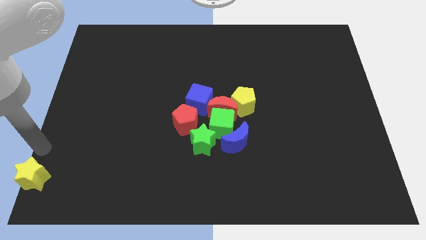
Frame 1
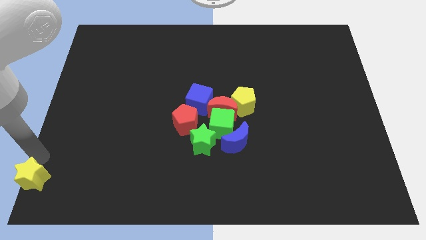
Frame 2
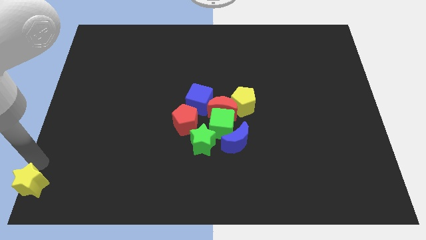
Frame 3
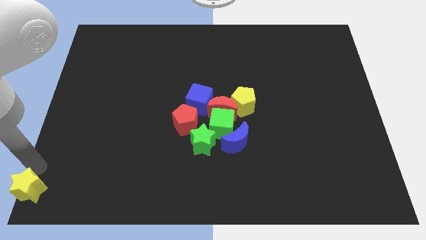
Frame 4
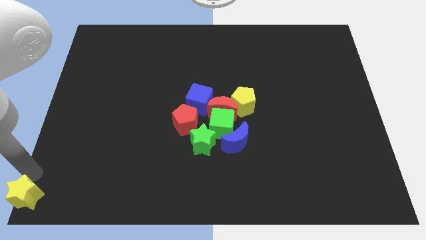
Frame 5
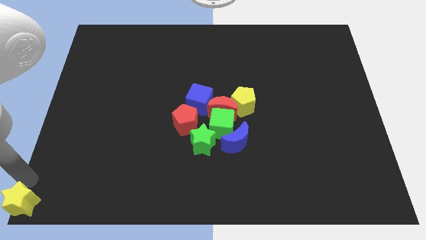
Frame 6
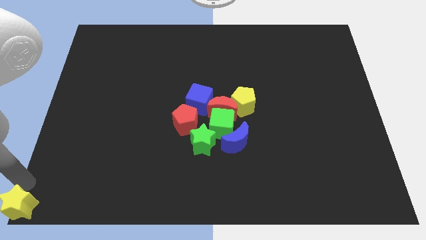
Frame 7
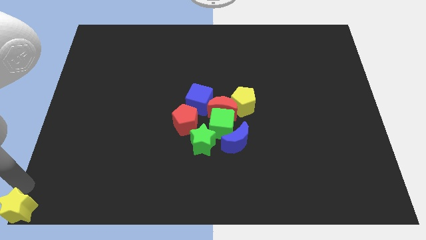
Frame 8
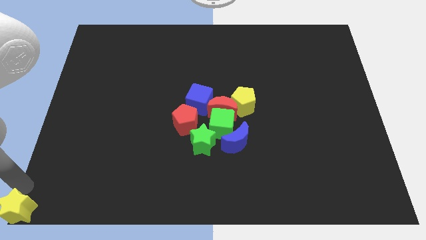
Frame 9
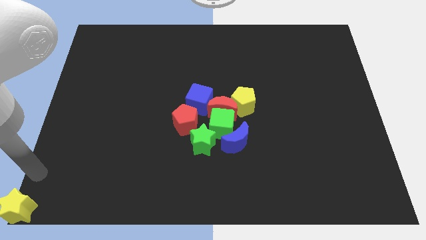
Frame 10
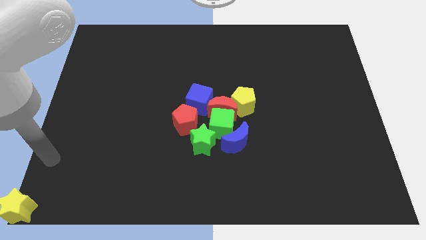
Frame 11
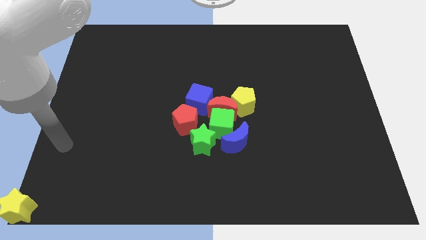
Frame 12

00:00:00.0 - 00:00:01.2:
place a yellow star towards down left corner

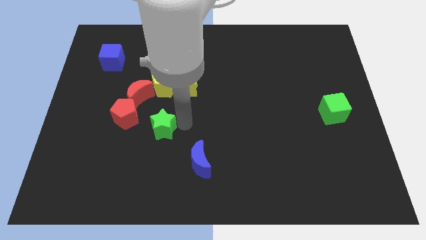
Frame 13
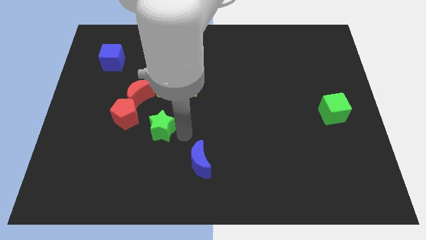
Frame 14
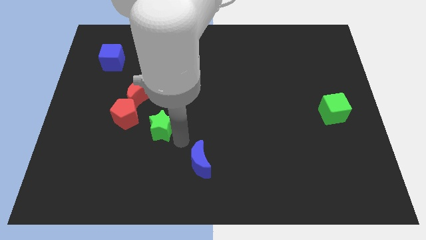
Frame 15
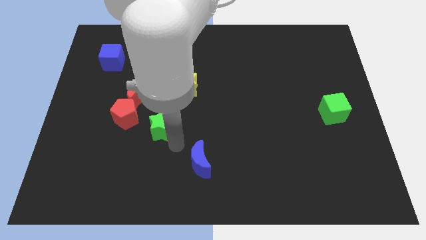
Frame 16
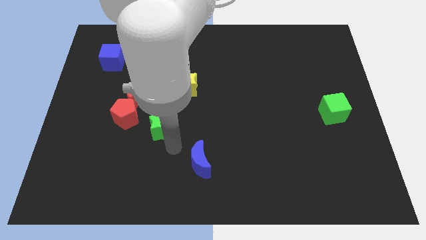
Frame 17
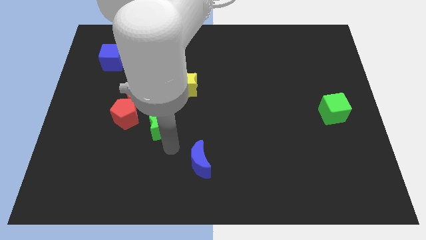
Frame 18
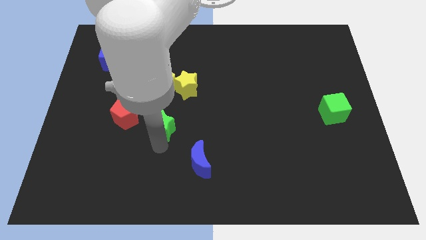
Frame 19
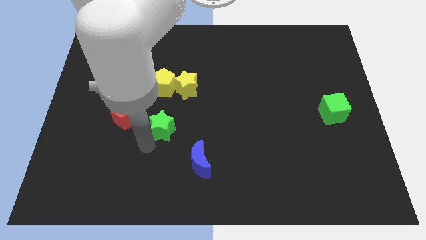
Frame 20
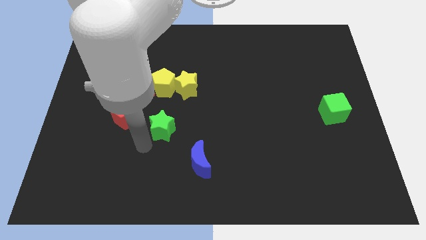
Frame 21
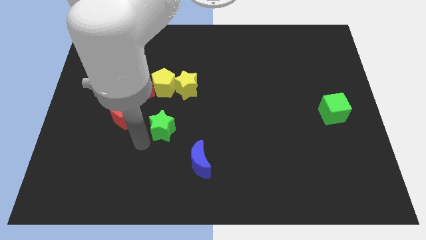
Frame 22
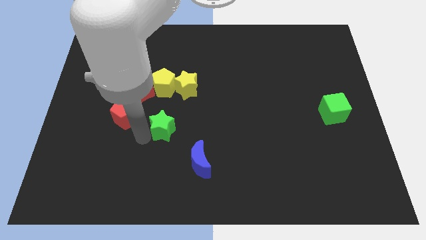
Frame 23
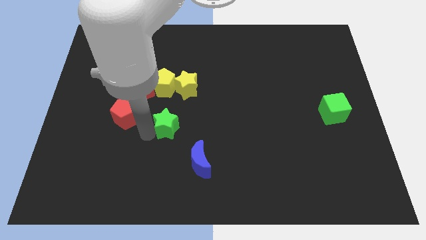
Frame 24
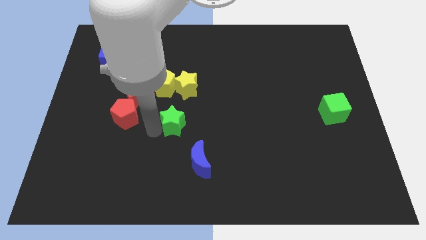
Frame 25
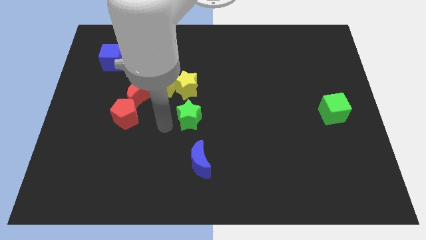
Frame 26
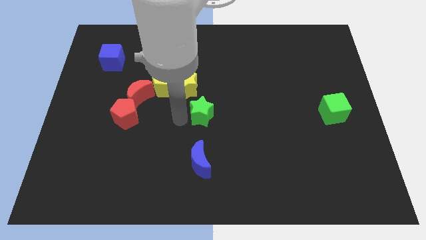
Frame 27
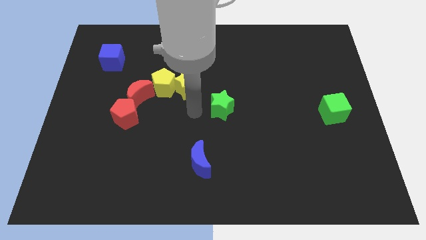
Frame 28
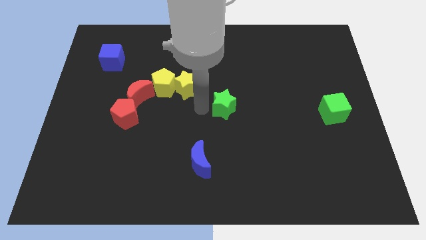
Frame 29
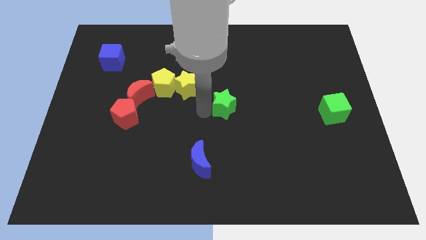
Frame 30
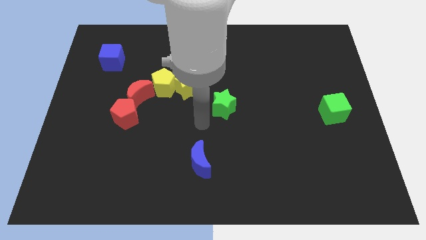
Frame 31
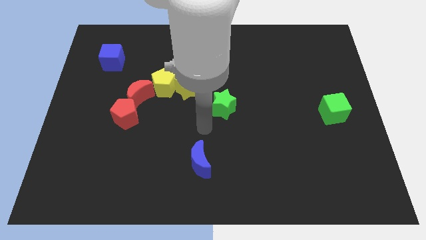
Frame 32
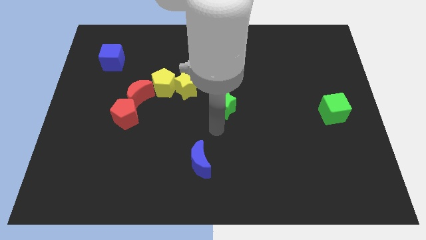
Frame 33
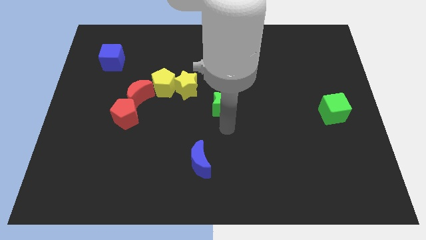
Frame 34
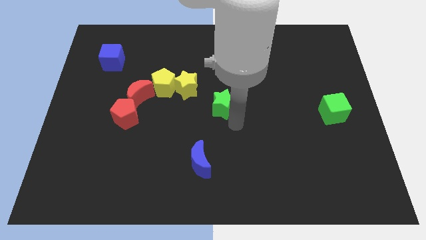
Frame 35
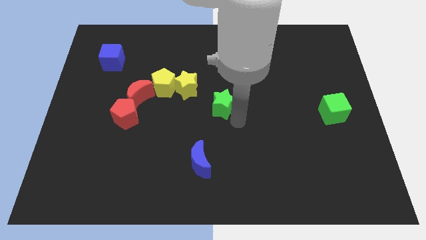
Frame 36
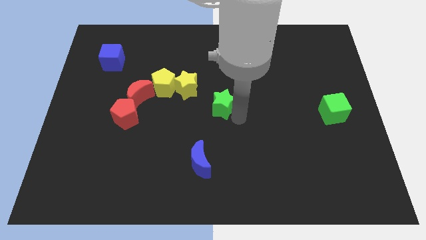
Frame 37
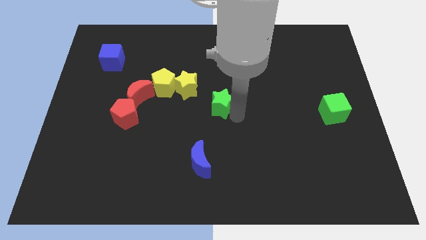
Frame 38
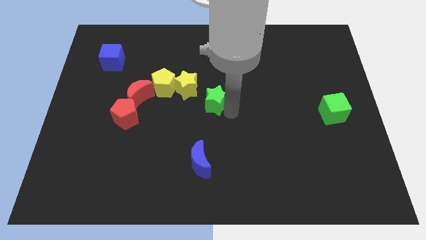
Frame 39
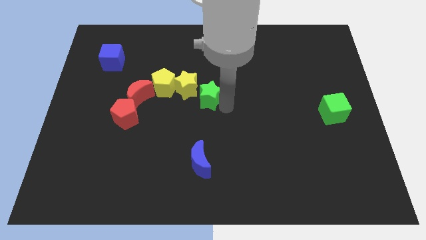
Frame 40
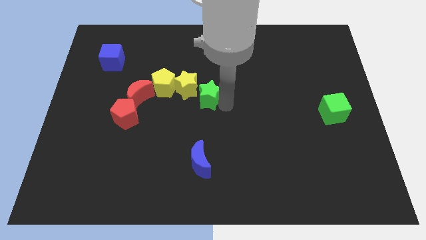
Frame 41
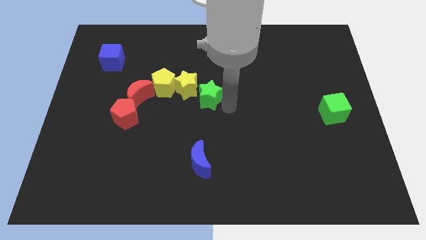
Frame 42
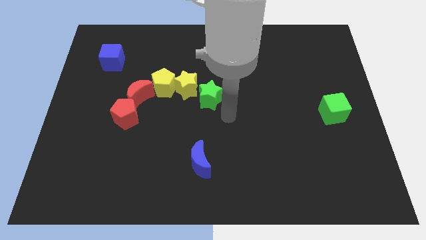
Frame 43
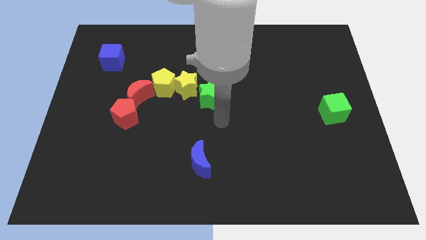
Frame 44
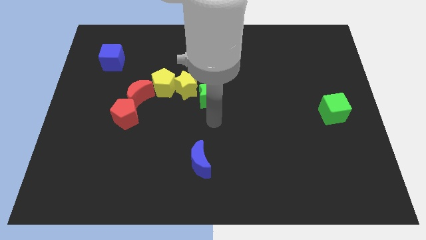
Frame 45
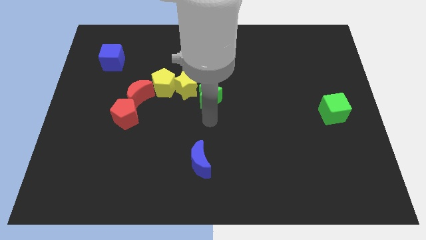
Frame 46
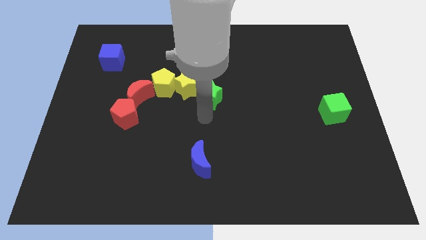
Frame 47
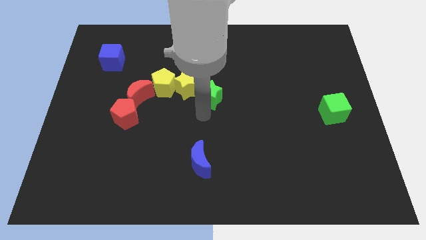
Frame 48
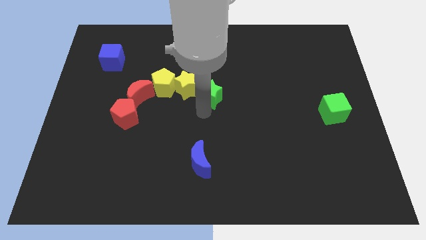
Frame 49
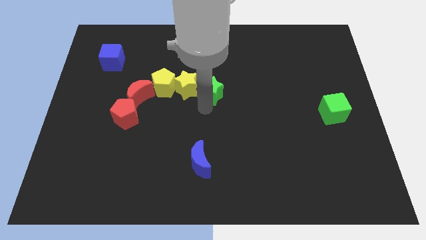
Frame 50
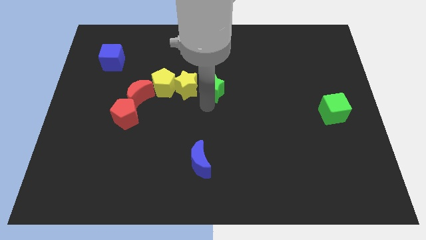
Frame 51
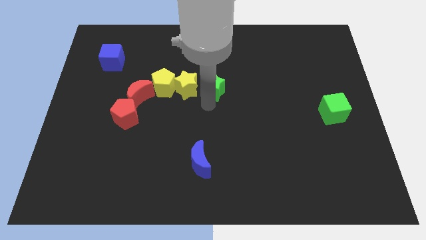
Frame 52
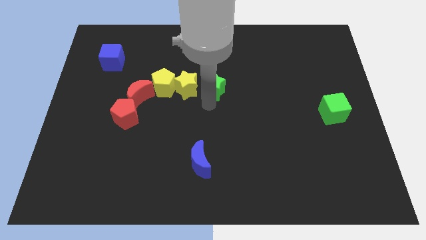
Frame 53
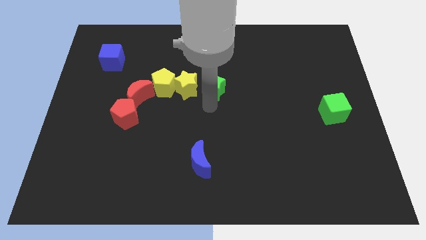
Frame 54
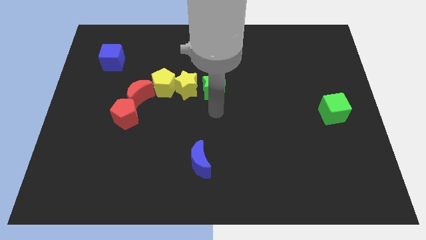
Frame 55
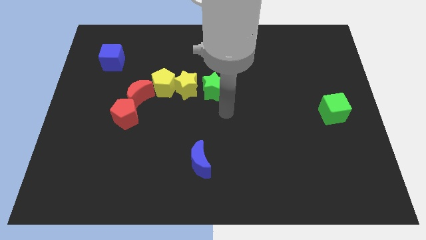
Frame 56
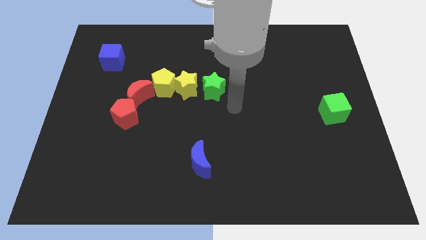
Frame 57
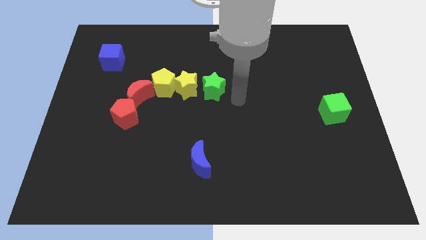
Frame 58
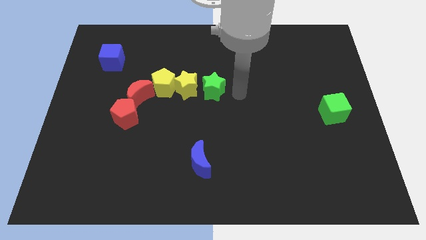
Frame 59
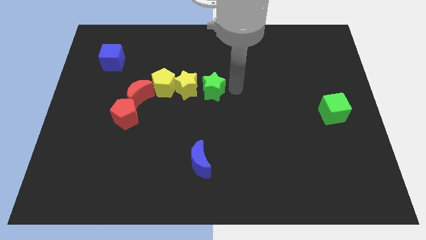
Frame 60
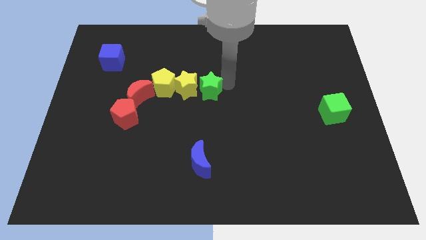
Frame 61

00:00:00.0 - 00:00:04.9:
place the green star right to the yellow star

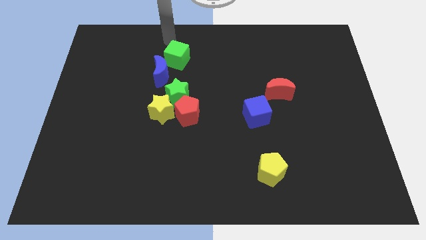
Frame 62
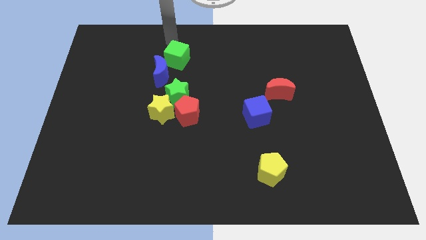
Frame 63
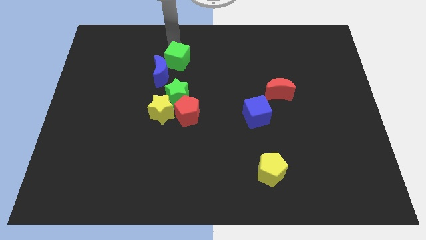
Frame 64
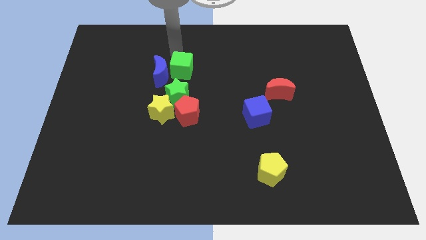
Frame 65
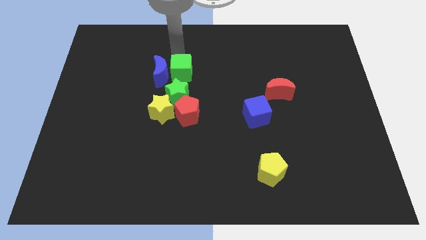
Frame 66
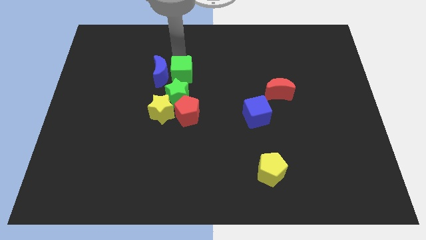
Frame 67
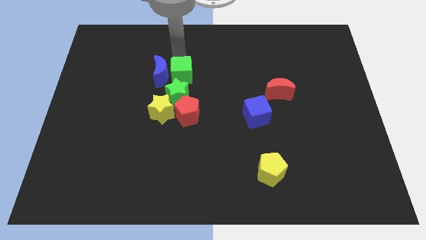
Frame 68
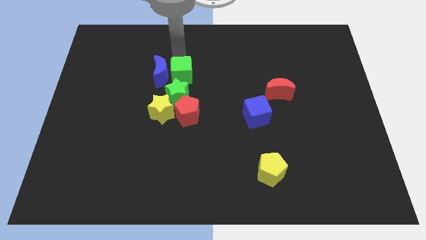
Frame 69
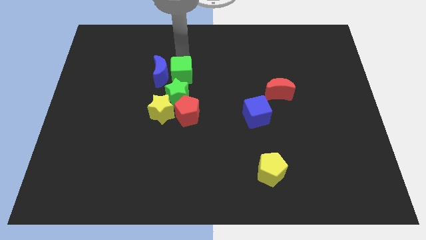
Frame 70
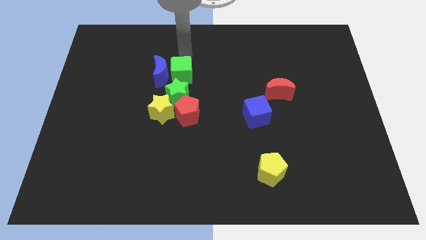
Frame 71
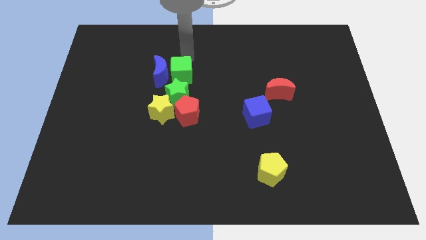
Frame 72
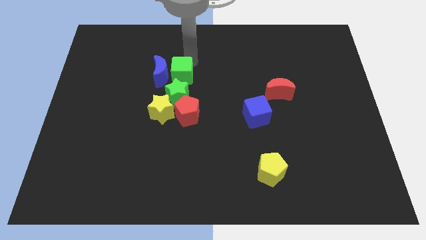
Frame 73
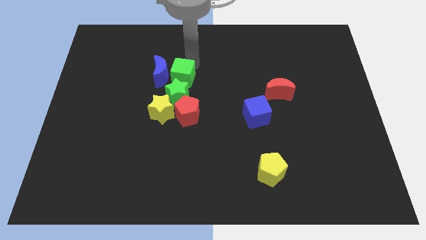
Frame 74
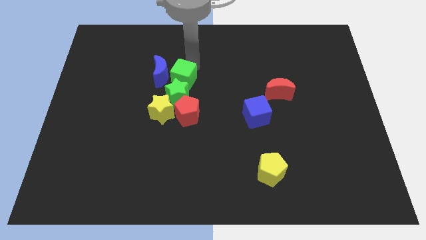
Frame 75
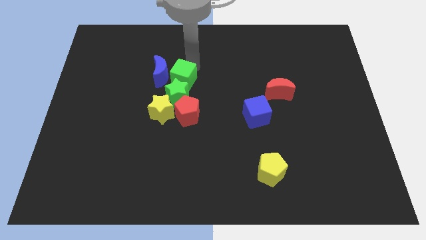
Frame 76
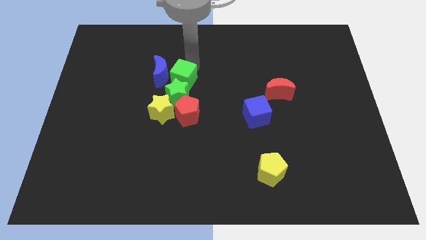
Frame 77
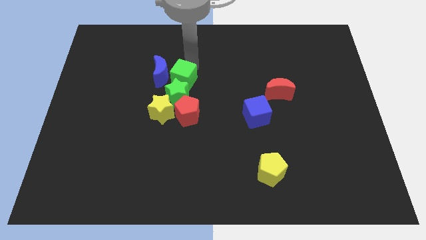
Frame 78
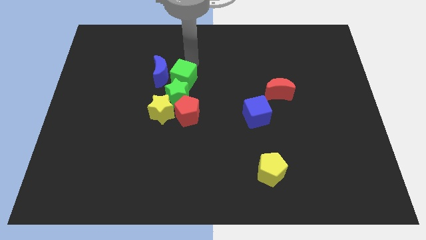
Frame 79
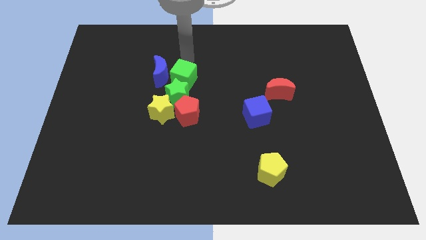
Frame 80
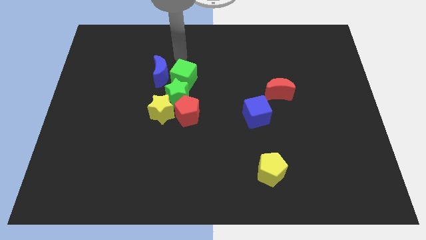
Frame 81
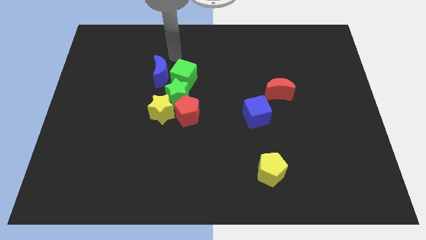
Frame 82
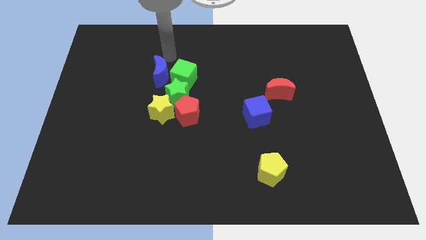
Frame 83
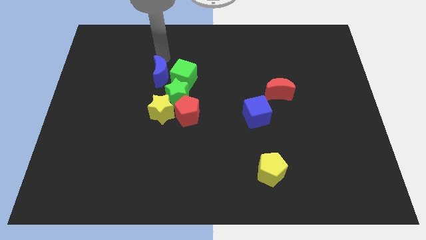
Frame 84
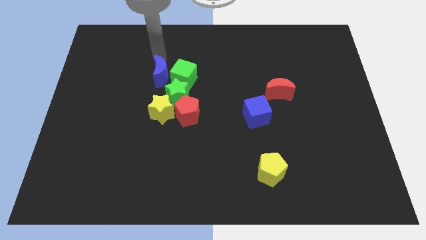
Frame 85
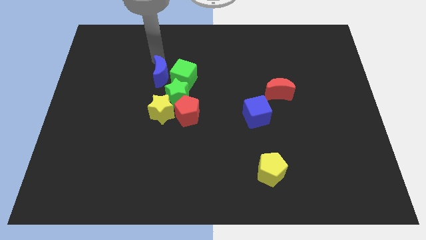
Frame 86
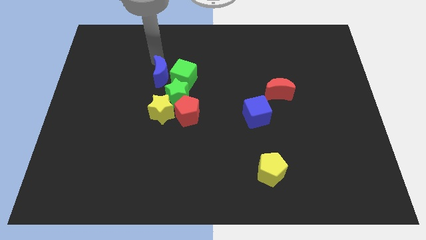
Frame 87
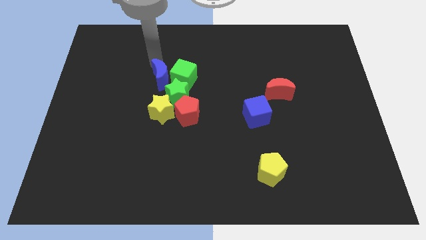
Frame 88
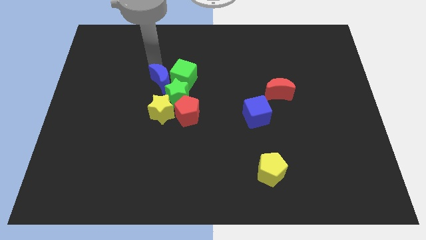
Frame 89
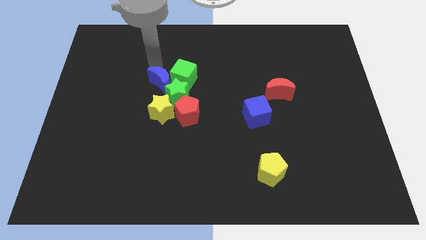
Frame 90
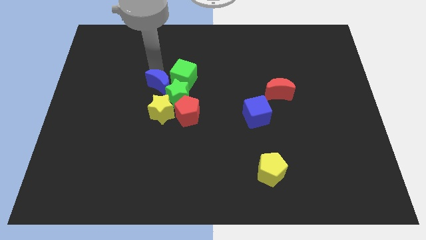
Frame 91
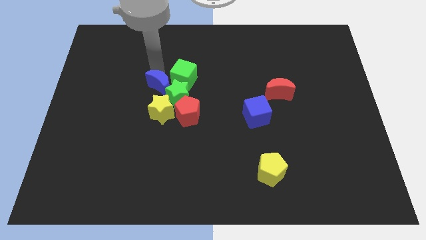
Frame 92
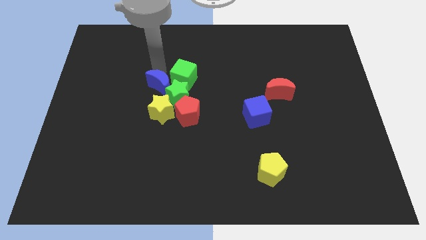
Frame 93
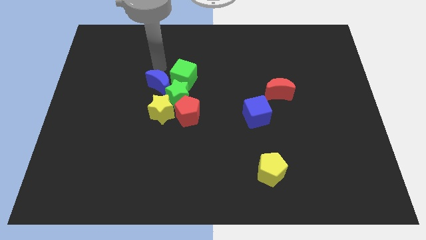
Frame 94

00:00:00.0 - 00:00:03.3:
push the green cube and blue moon into the green star
